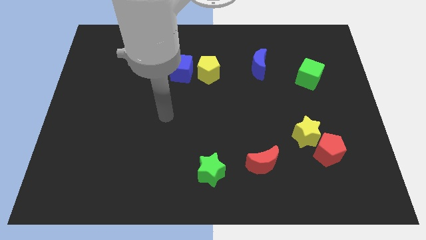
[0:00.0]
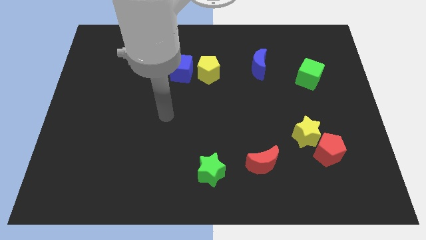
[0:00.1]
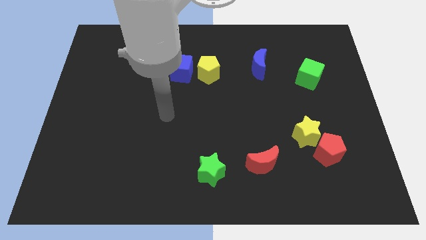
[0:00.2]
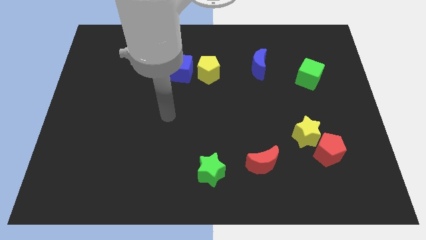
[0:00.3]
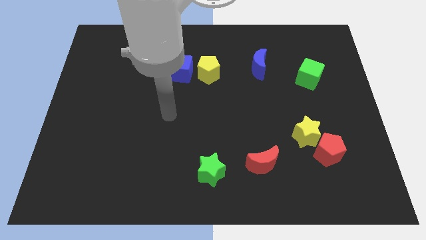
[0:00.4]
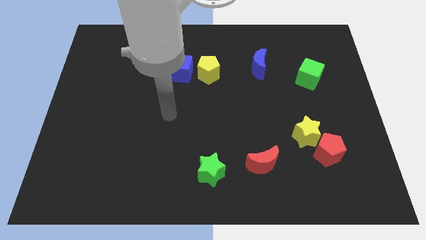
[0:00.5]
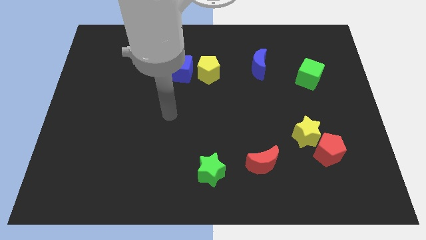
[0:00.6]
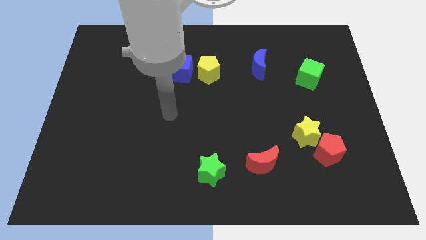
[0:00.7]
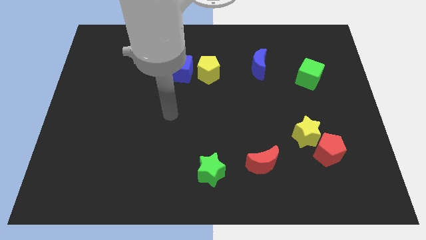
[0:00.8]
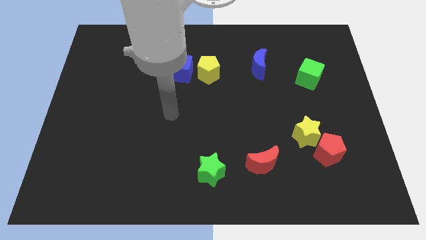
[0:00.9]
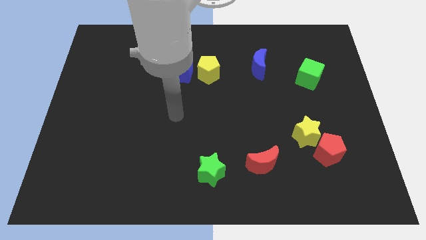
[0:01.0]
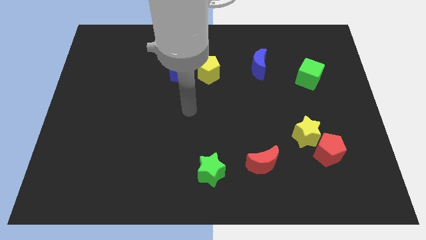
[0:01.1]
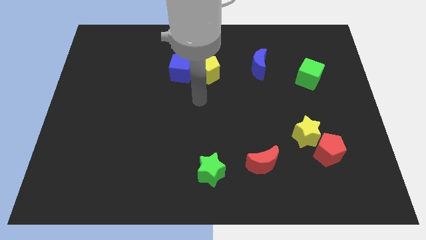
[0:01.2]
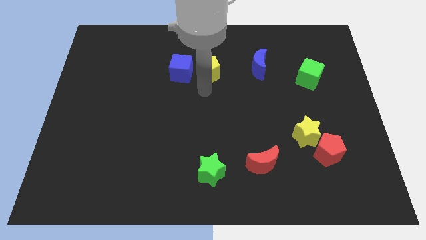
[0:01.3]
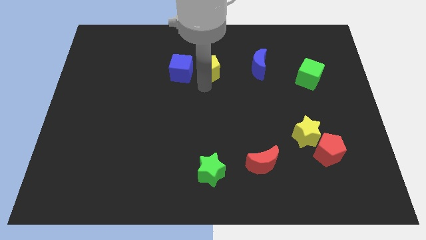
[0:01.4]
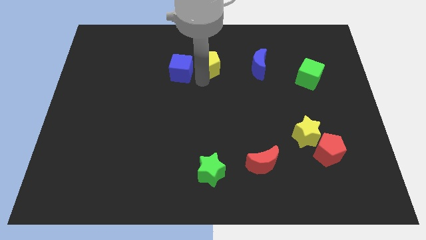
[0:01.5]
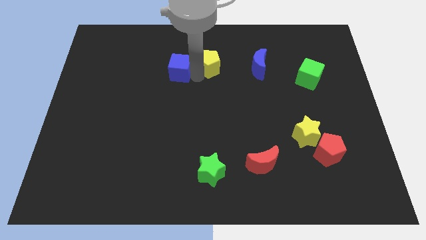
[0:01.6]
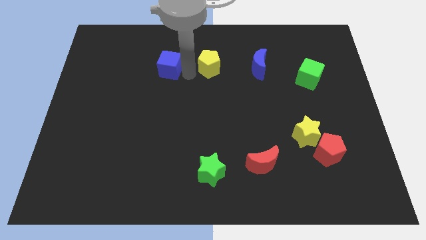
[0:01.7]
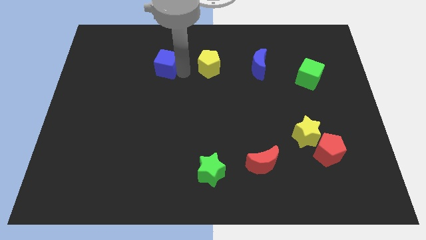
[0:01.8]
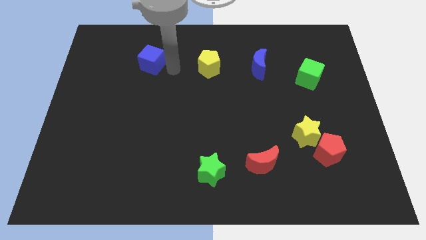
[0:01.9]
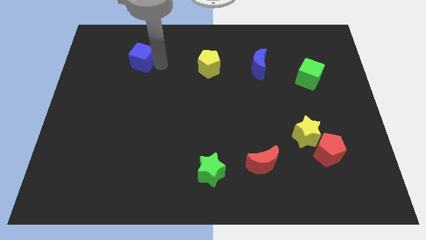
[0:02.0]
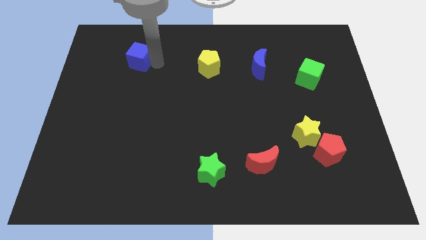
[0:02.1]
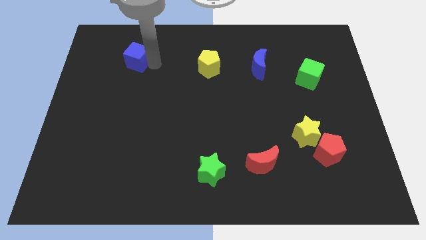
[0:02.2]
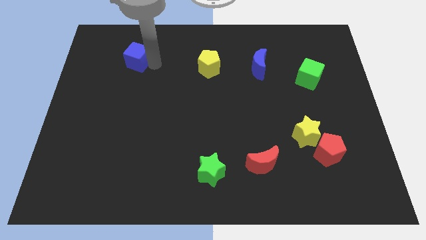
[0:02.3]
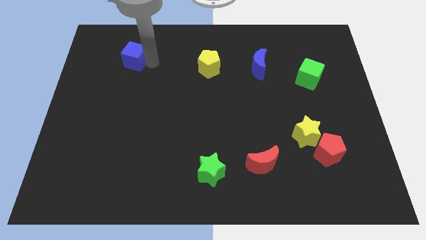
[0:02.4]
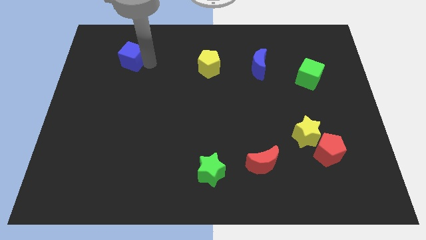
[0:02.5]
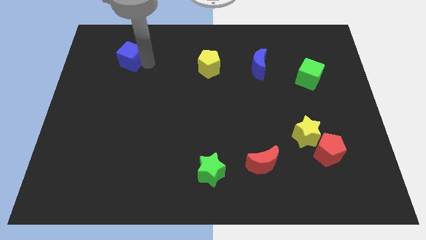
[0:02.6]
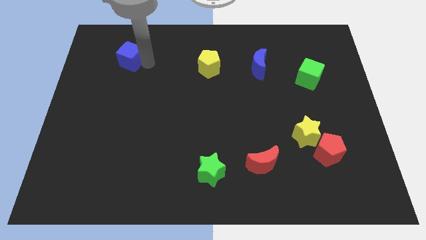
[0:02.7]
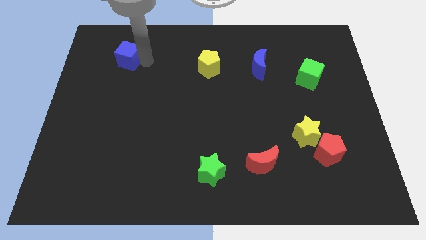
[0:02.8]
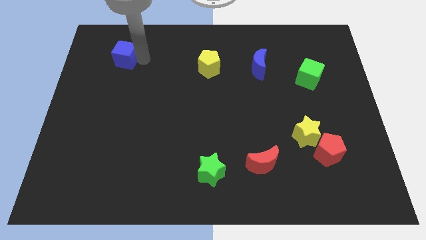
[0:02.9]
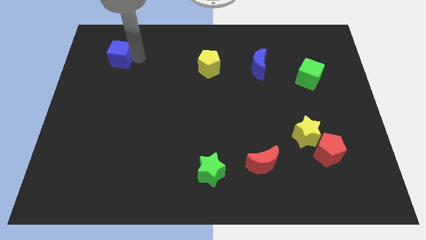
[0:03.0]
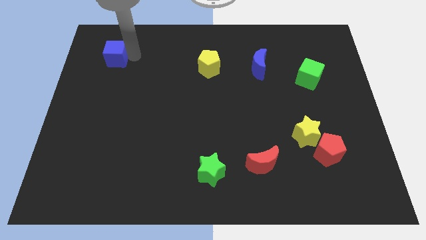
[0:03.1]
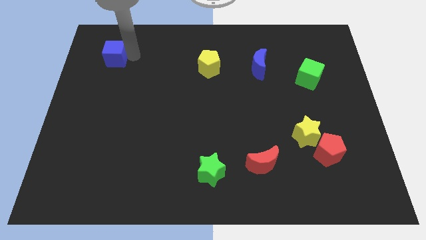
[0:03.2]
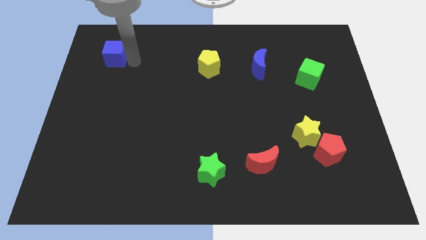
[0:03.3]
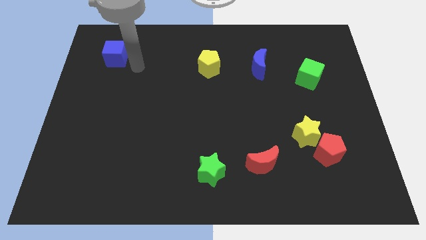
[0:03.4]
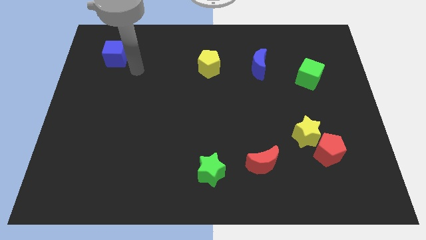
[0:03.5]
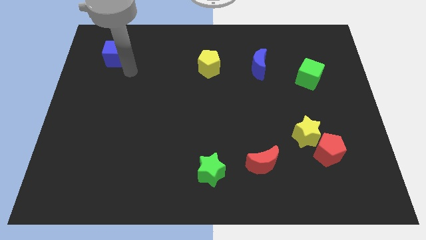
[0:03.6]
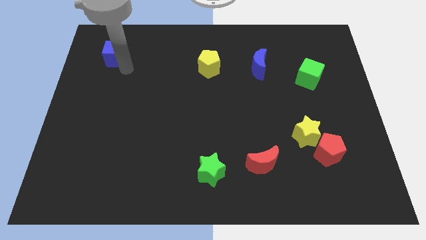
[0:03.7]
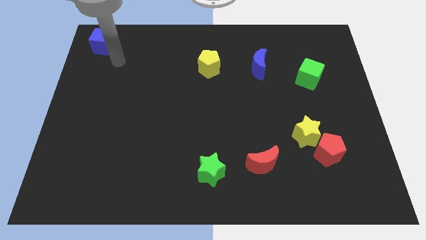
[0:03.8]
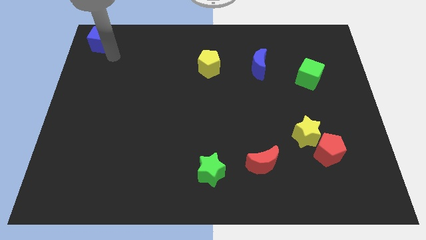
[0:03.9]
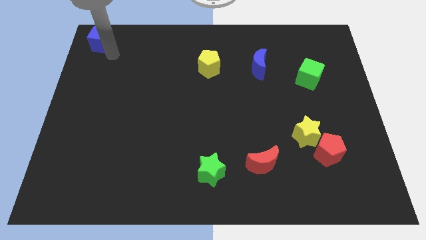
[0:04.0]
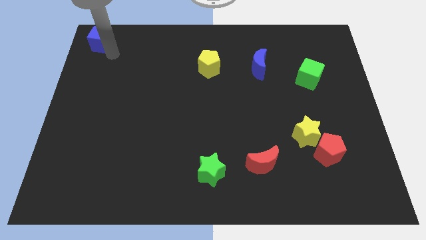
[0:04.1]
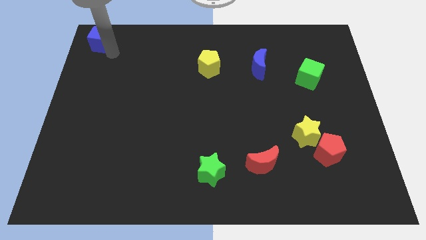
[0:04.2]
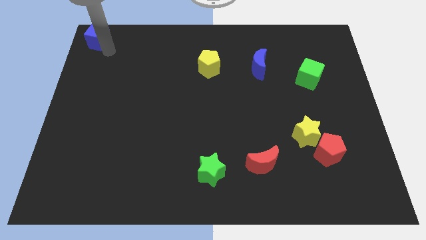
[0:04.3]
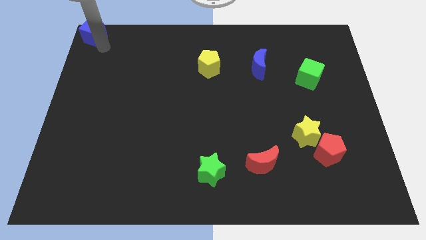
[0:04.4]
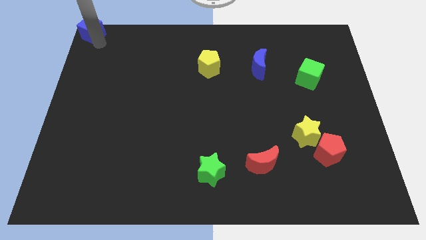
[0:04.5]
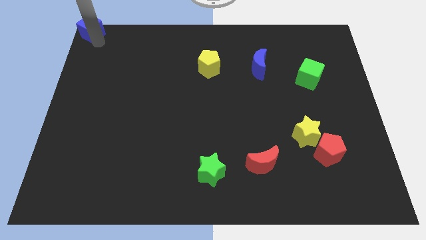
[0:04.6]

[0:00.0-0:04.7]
push the blue cube to the top left corner of the board

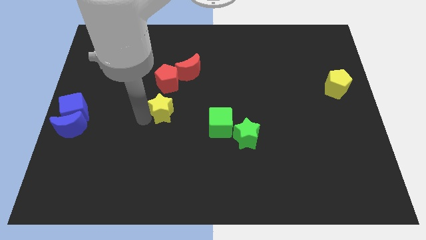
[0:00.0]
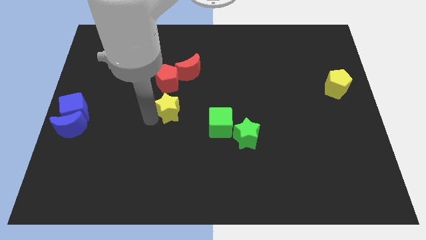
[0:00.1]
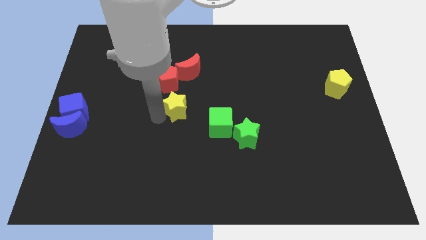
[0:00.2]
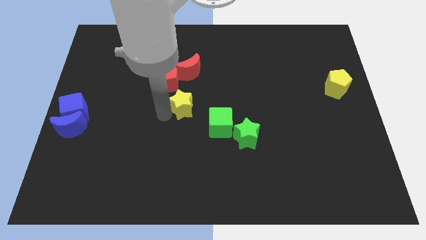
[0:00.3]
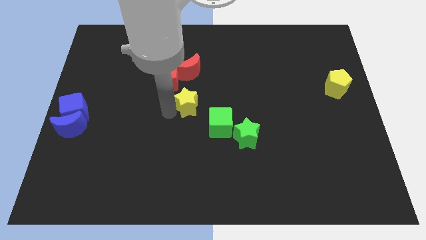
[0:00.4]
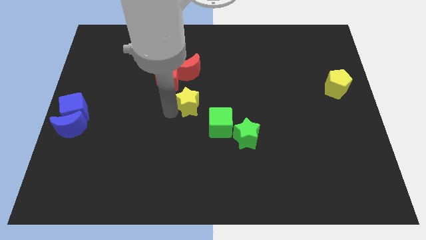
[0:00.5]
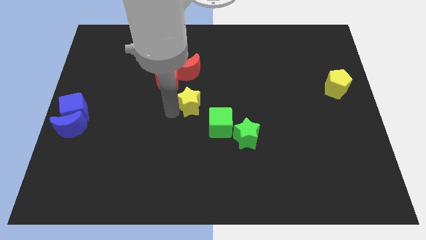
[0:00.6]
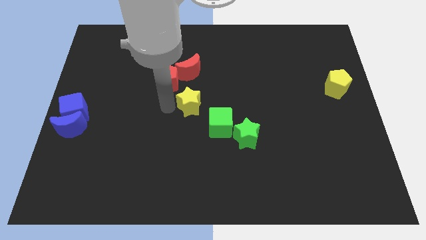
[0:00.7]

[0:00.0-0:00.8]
place yellow star to the bottom right of red pentagon

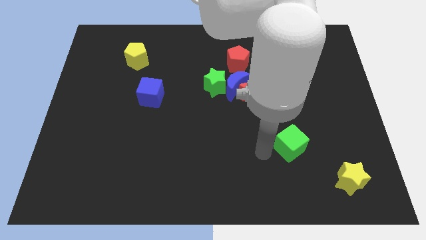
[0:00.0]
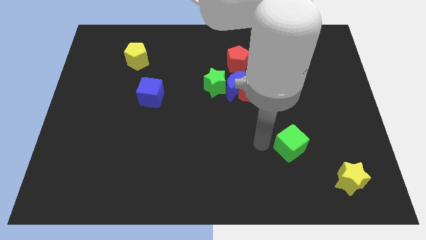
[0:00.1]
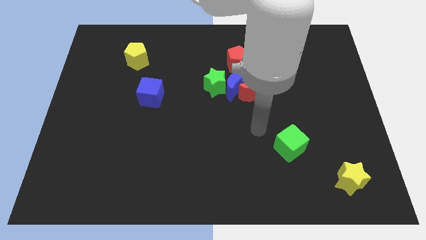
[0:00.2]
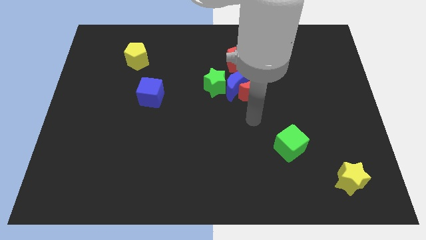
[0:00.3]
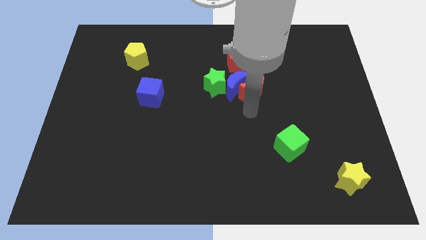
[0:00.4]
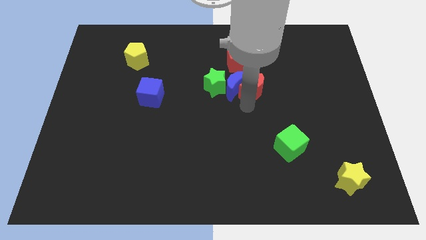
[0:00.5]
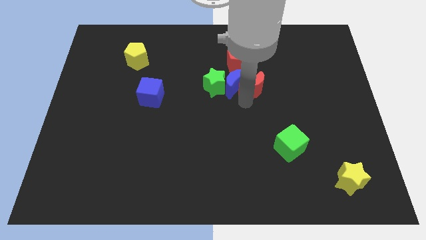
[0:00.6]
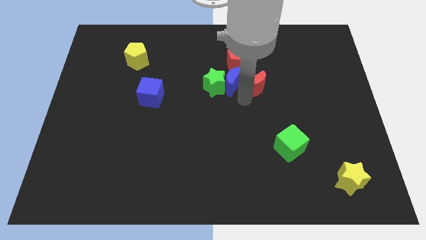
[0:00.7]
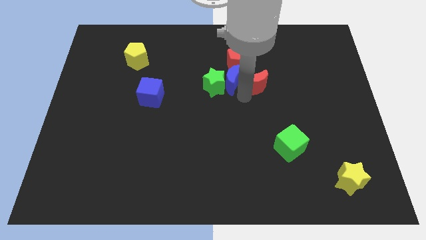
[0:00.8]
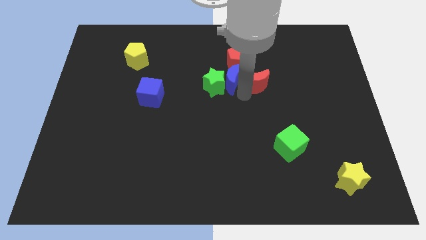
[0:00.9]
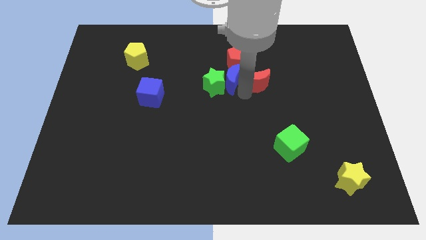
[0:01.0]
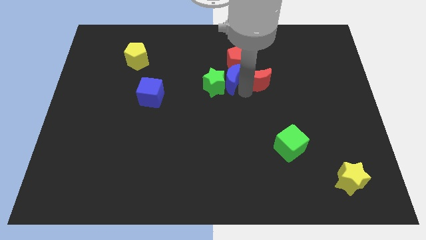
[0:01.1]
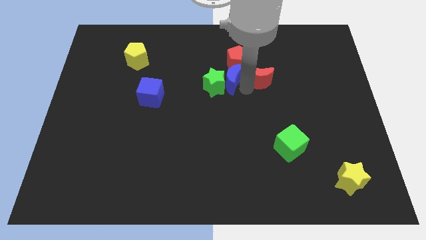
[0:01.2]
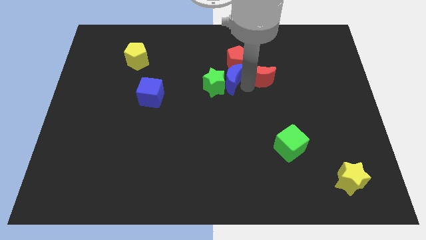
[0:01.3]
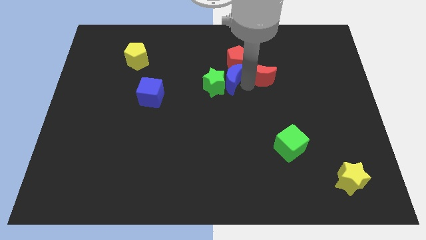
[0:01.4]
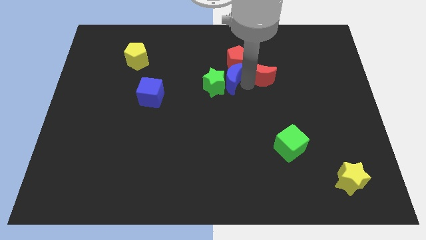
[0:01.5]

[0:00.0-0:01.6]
separate the blue crescent from the red crescent

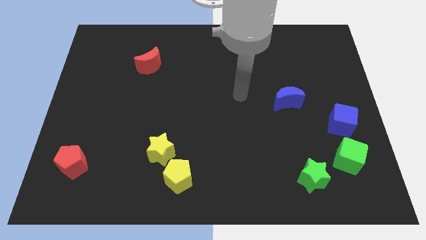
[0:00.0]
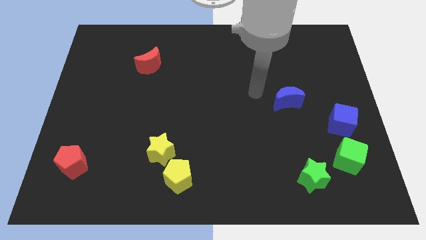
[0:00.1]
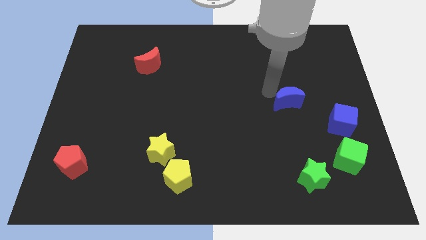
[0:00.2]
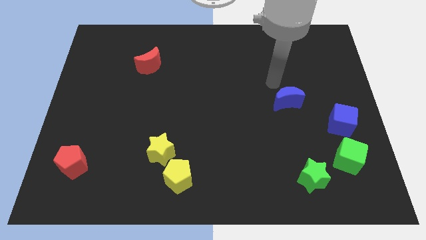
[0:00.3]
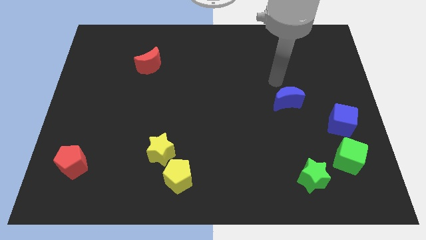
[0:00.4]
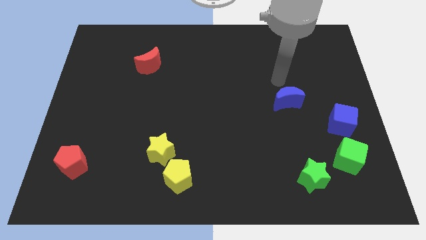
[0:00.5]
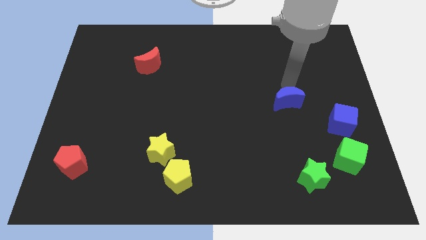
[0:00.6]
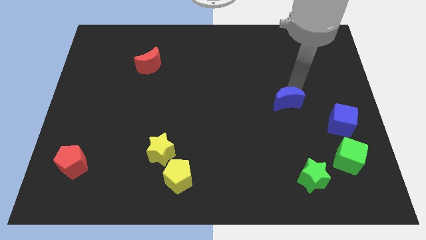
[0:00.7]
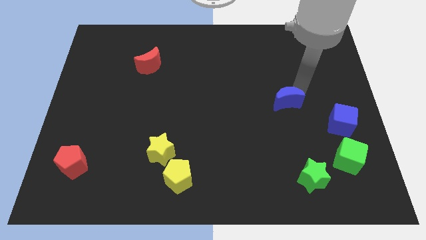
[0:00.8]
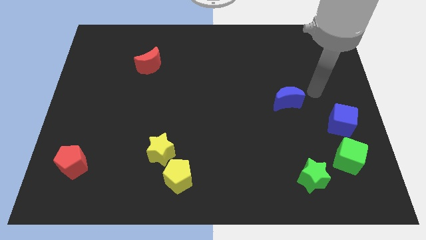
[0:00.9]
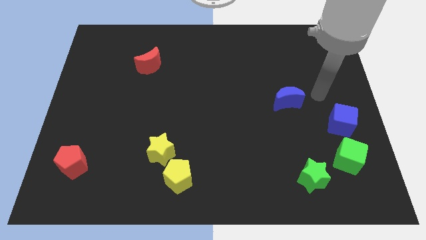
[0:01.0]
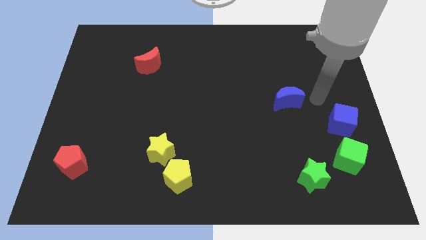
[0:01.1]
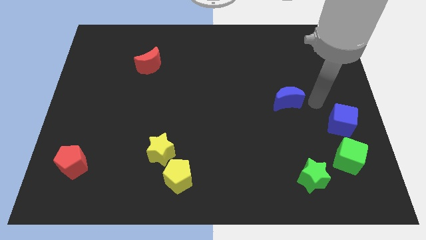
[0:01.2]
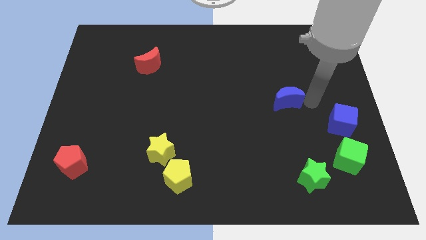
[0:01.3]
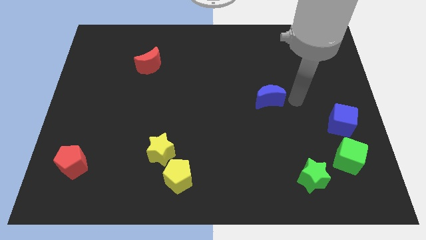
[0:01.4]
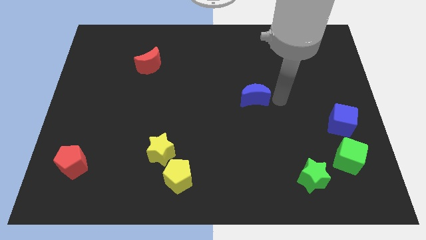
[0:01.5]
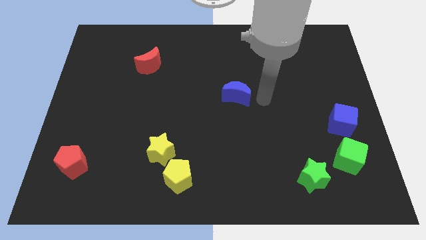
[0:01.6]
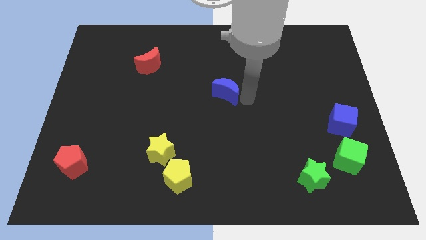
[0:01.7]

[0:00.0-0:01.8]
put the blue moon at the center of the board
